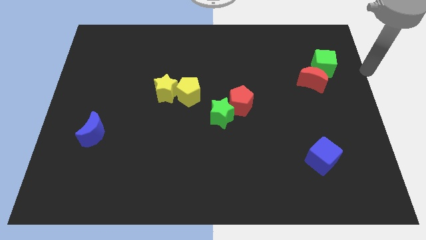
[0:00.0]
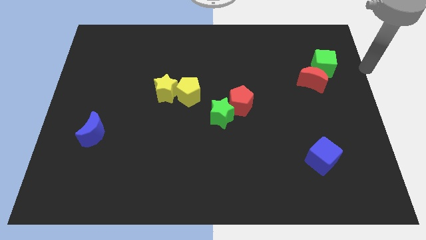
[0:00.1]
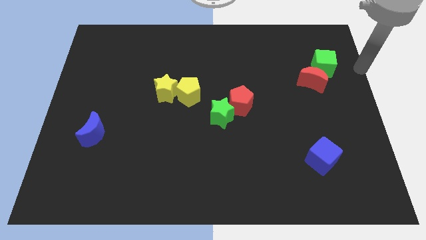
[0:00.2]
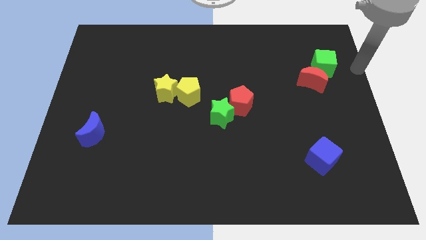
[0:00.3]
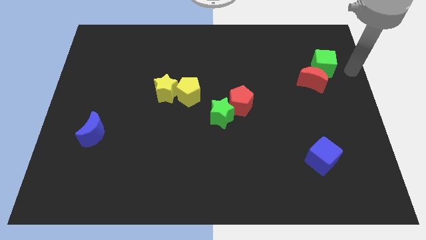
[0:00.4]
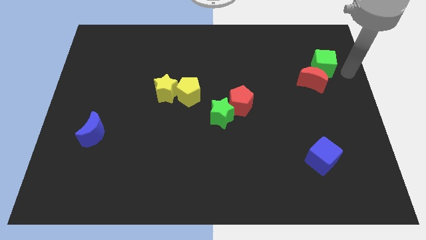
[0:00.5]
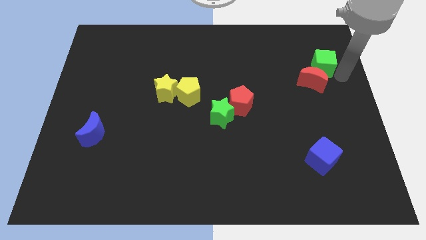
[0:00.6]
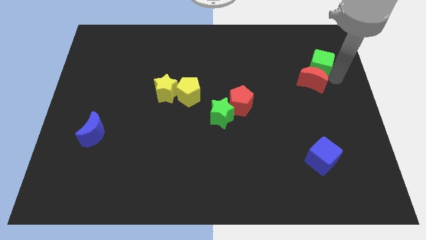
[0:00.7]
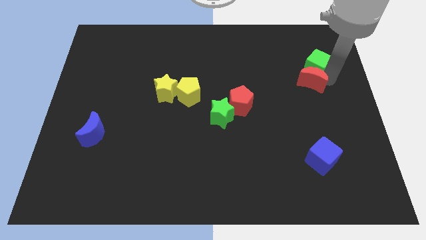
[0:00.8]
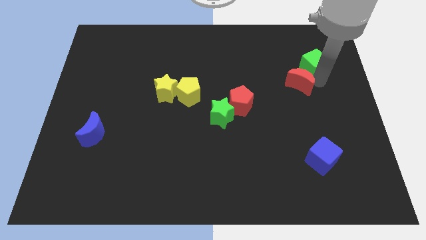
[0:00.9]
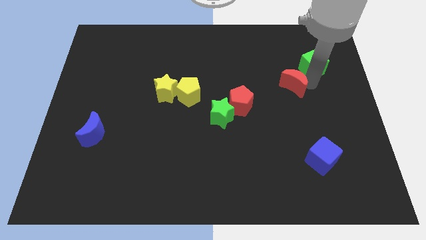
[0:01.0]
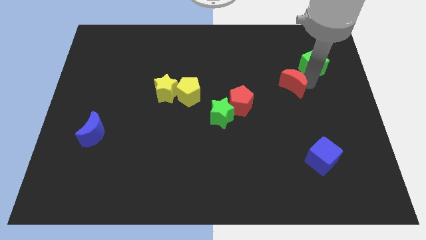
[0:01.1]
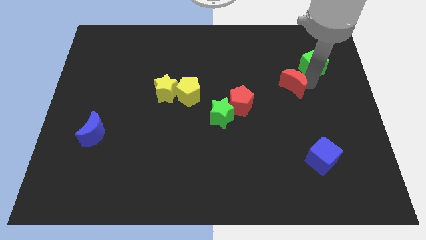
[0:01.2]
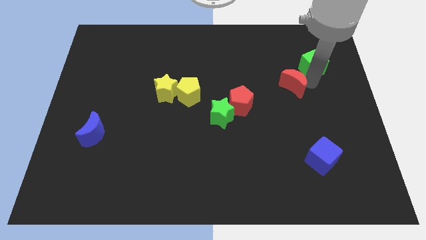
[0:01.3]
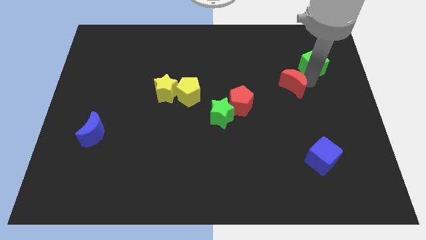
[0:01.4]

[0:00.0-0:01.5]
push the red moon away from the green cube

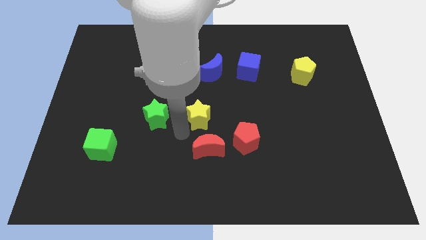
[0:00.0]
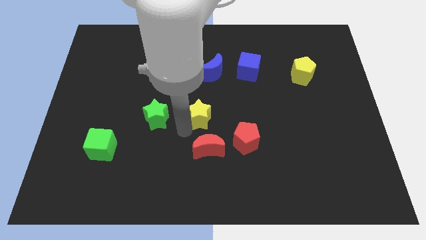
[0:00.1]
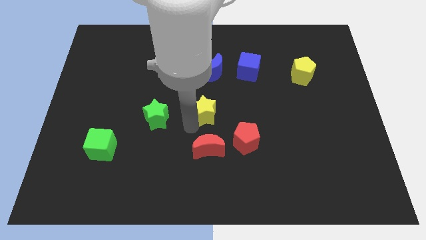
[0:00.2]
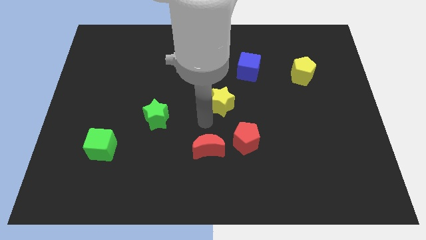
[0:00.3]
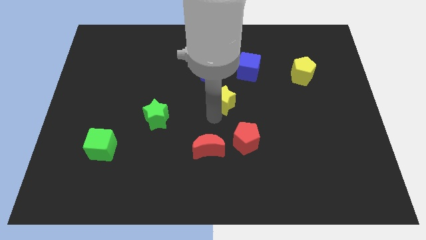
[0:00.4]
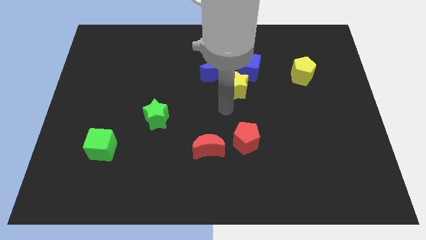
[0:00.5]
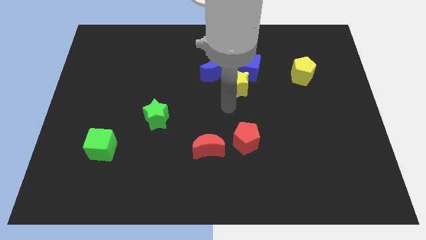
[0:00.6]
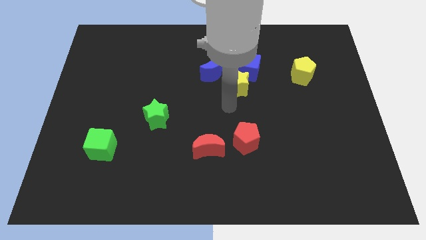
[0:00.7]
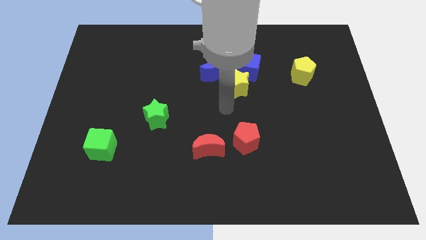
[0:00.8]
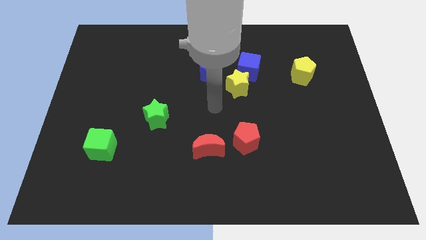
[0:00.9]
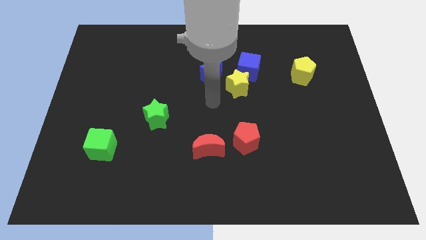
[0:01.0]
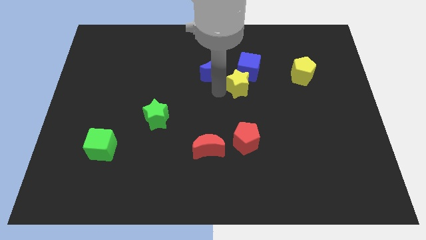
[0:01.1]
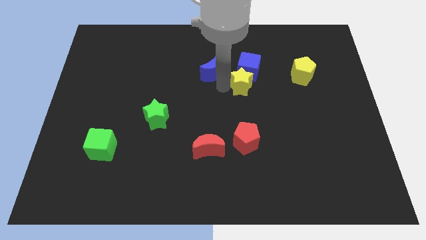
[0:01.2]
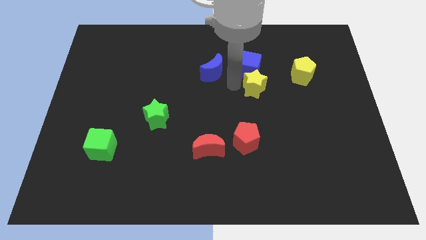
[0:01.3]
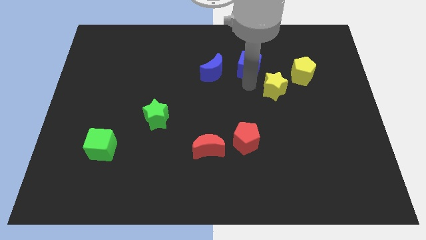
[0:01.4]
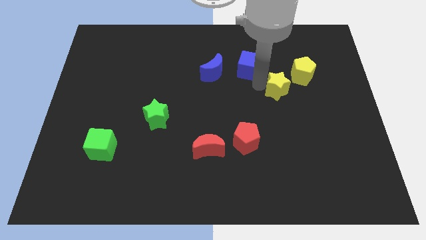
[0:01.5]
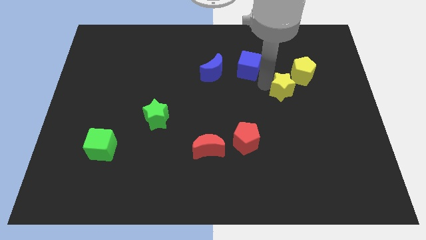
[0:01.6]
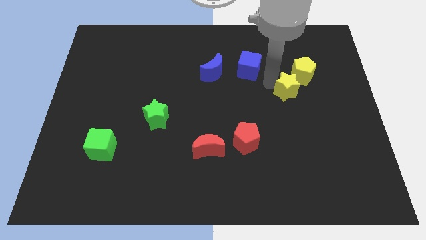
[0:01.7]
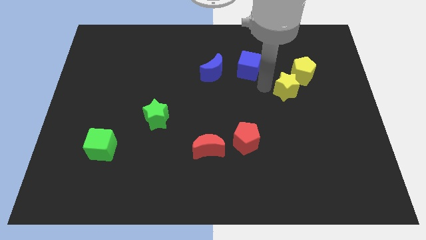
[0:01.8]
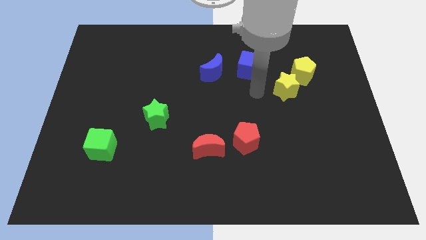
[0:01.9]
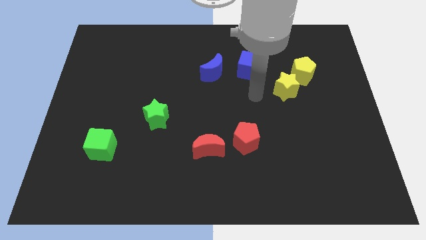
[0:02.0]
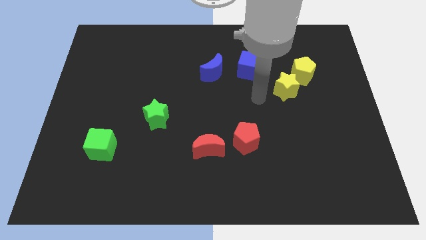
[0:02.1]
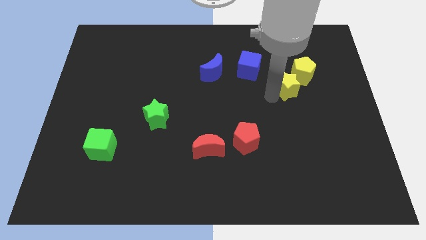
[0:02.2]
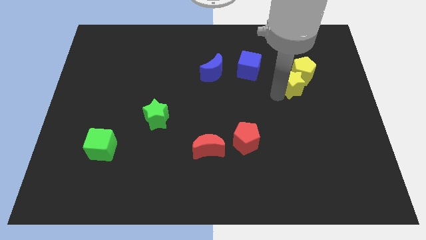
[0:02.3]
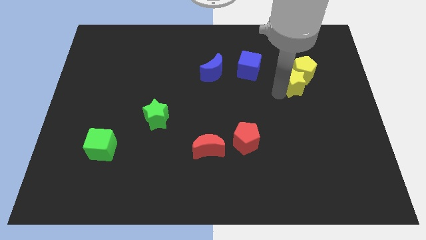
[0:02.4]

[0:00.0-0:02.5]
push the yellow star into the bottom of the yellow pentagon

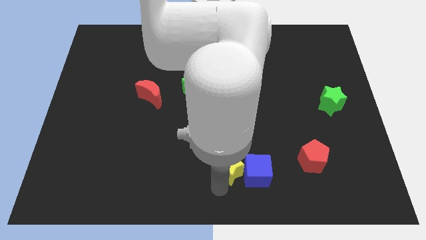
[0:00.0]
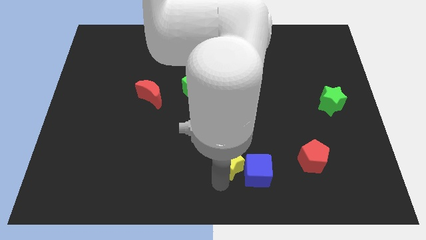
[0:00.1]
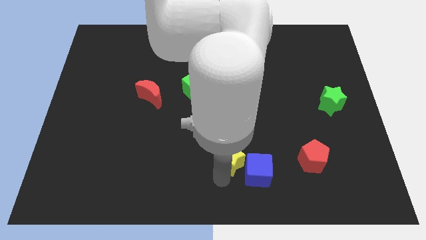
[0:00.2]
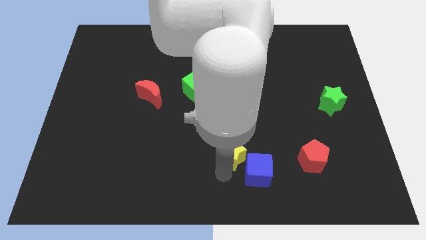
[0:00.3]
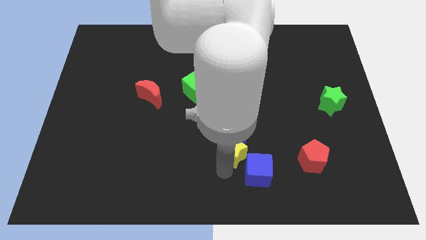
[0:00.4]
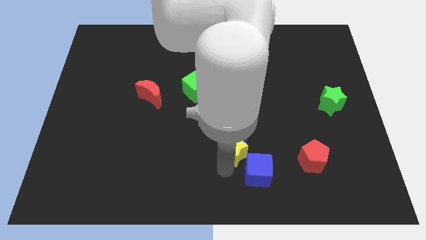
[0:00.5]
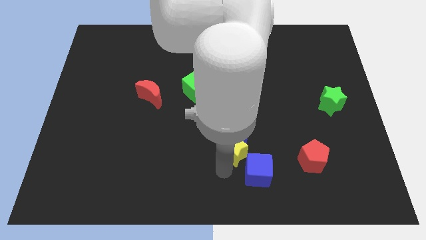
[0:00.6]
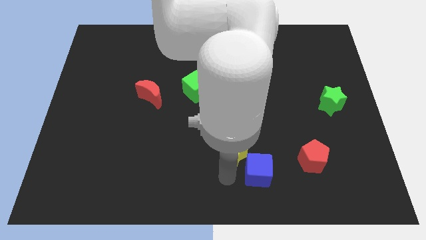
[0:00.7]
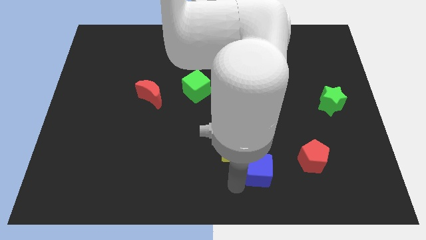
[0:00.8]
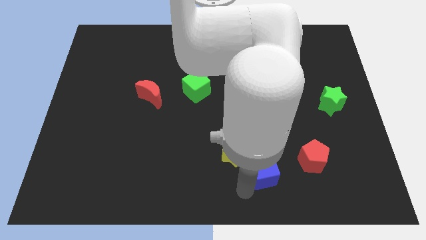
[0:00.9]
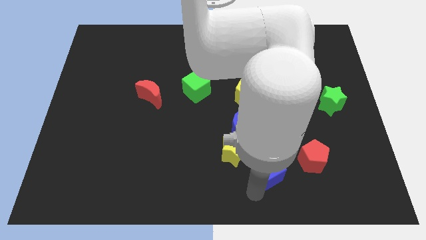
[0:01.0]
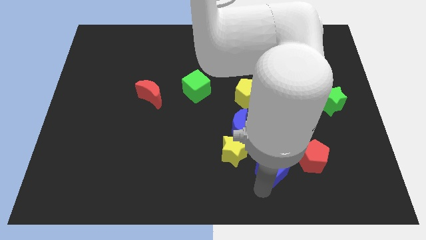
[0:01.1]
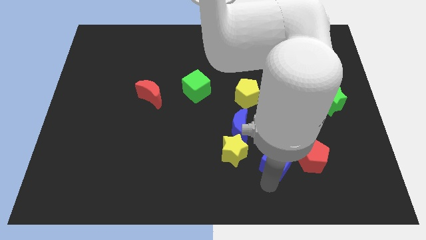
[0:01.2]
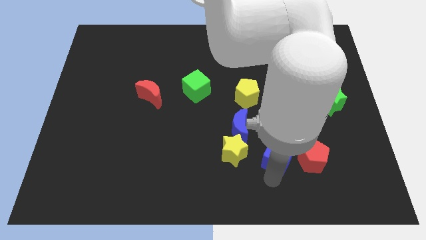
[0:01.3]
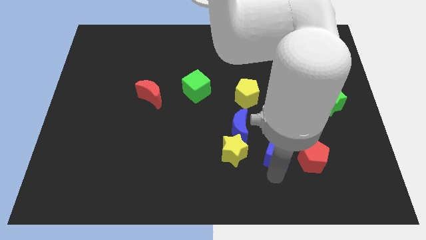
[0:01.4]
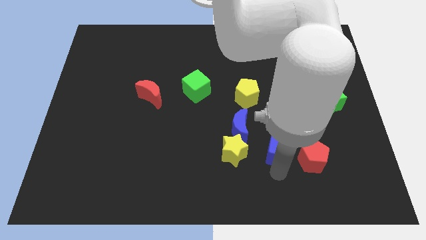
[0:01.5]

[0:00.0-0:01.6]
move the blue cube to the left of the red pentagon

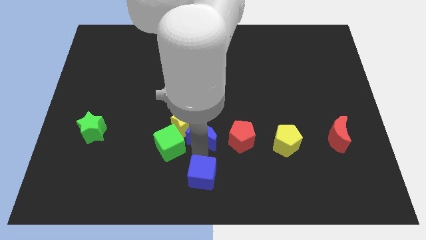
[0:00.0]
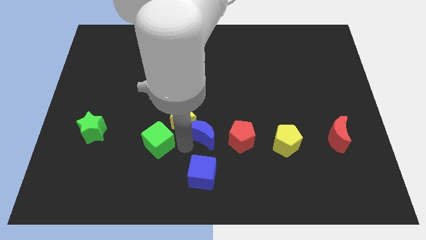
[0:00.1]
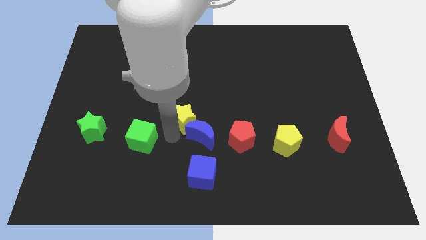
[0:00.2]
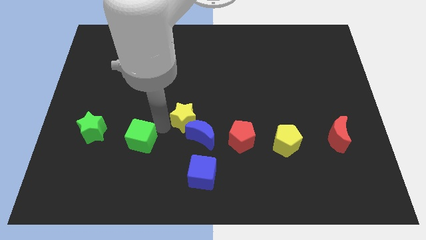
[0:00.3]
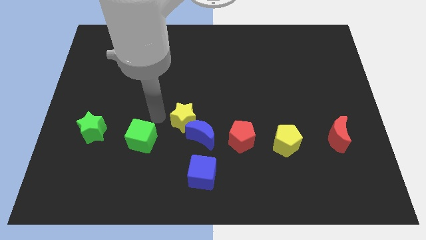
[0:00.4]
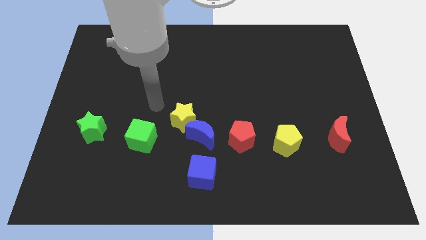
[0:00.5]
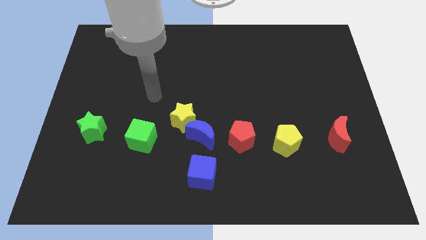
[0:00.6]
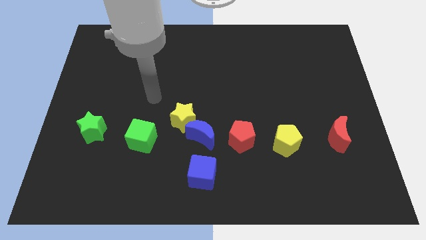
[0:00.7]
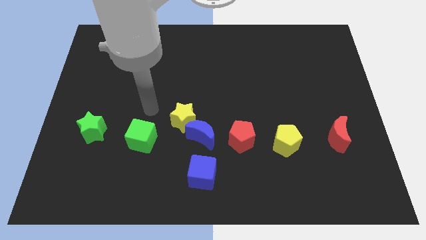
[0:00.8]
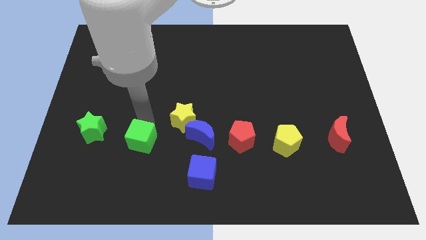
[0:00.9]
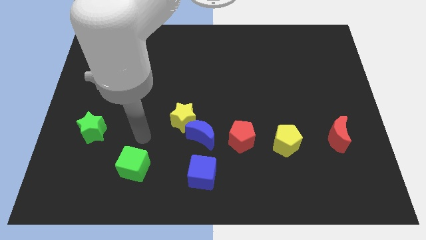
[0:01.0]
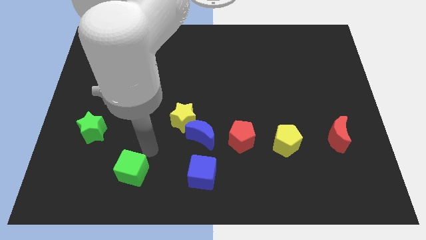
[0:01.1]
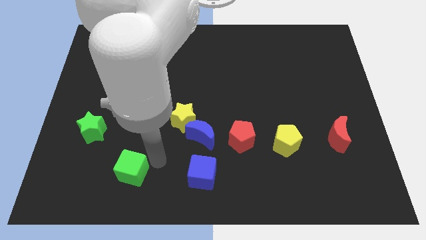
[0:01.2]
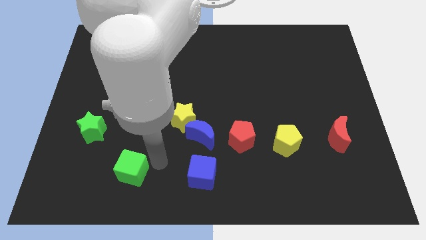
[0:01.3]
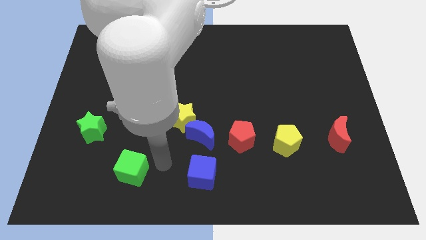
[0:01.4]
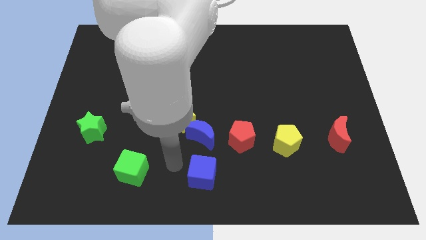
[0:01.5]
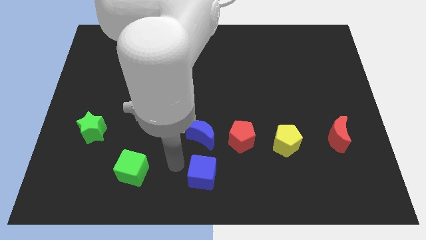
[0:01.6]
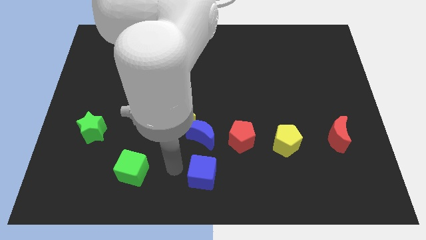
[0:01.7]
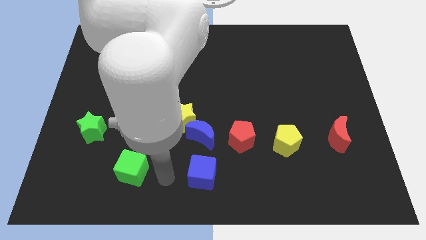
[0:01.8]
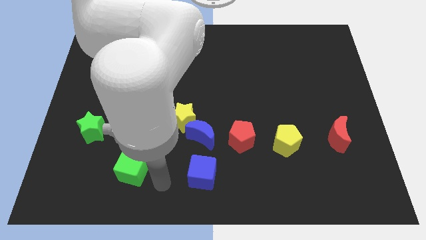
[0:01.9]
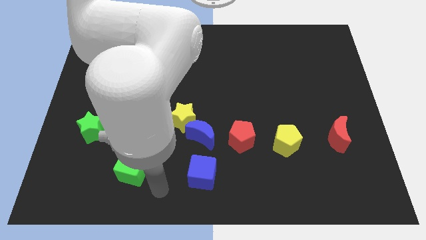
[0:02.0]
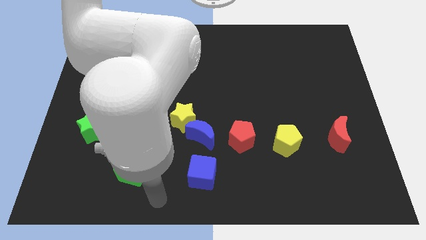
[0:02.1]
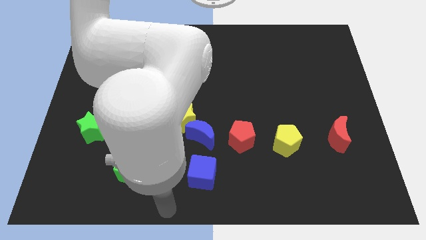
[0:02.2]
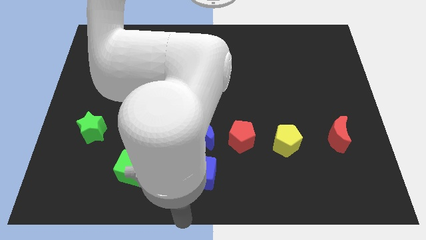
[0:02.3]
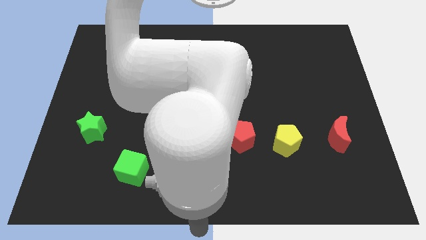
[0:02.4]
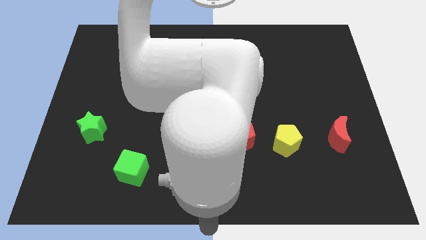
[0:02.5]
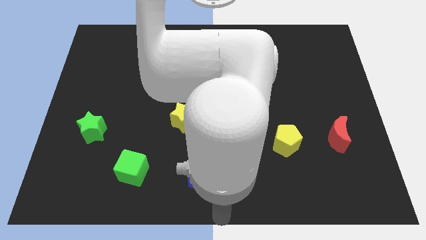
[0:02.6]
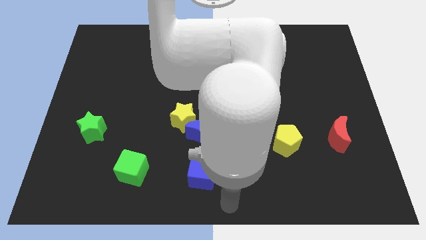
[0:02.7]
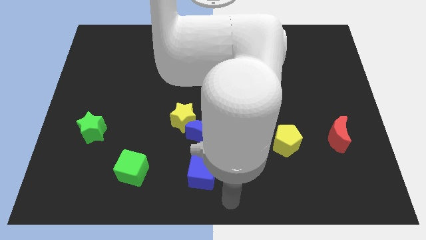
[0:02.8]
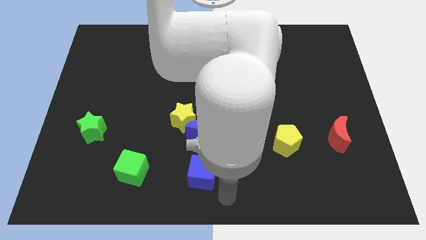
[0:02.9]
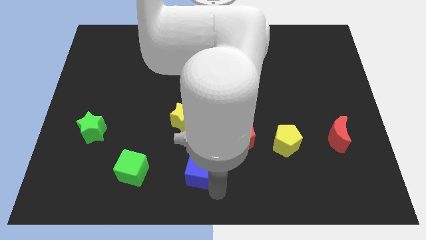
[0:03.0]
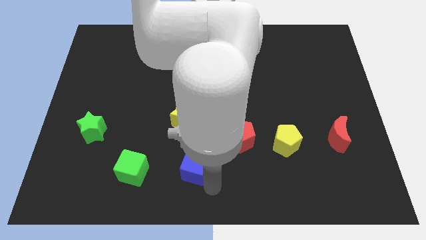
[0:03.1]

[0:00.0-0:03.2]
slightly move the green cube towards the bottom side

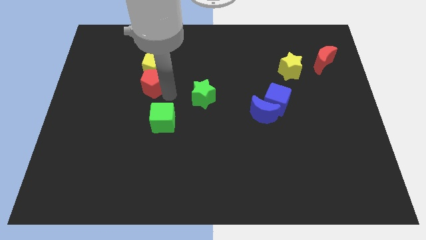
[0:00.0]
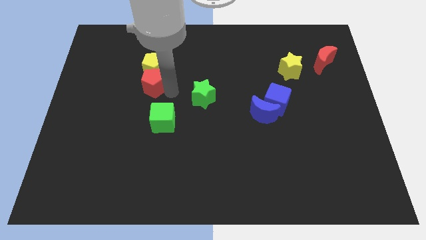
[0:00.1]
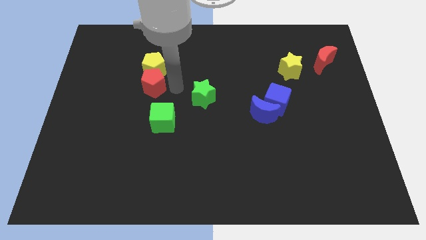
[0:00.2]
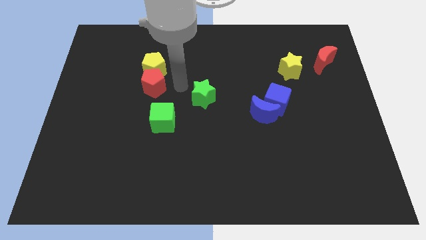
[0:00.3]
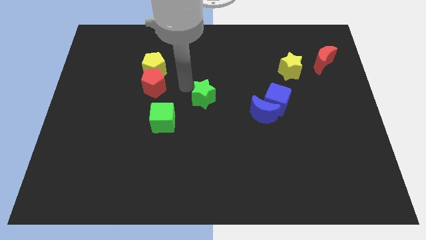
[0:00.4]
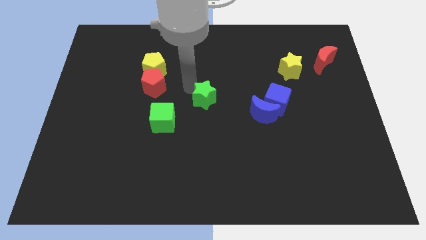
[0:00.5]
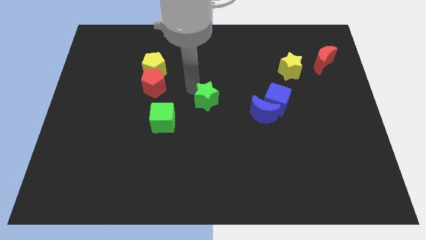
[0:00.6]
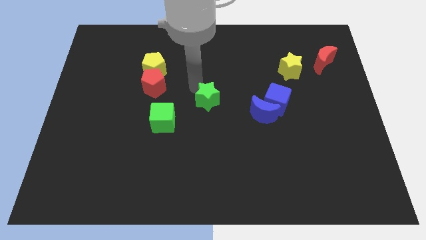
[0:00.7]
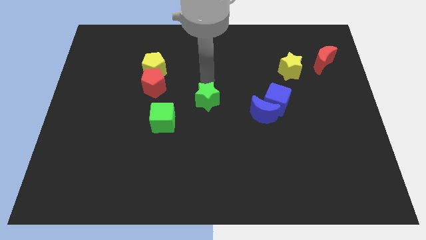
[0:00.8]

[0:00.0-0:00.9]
place your hand above the green star
